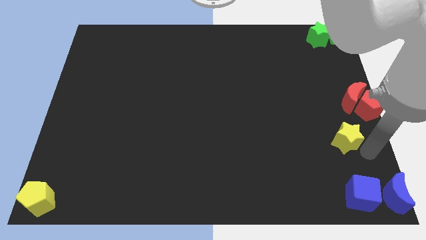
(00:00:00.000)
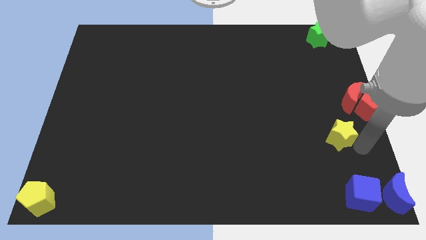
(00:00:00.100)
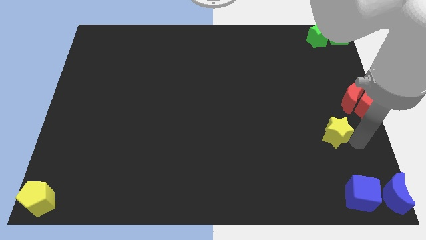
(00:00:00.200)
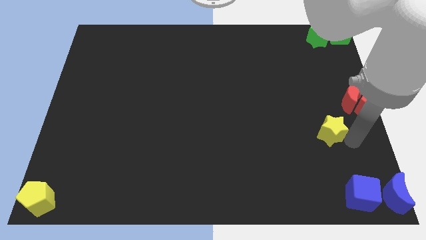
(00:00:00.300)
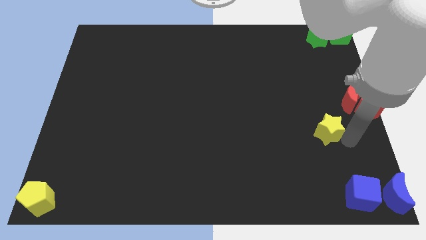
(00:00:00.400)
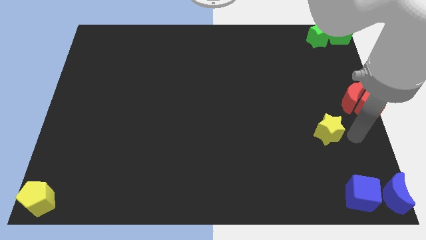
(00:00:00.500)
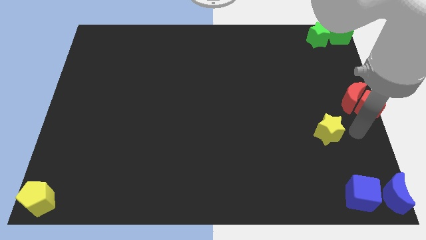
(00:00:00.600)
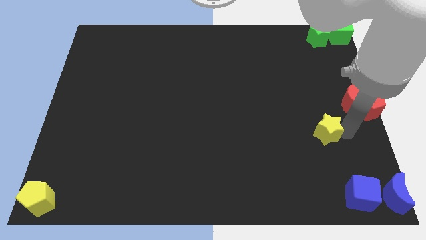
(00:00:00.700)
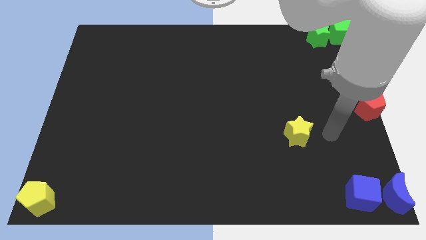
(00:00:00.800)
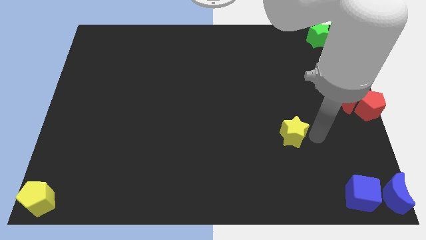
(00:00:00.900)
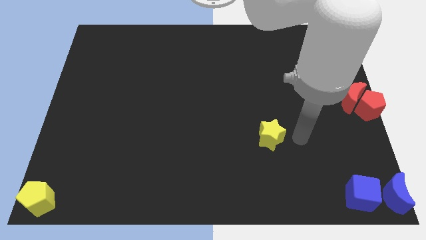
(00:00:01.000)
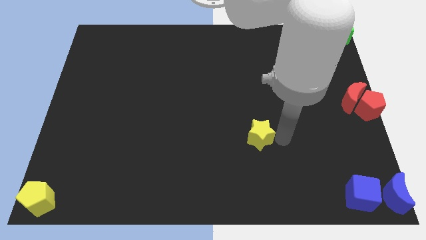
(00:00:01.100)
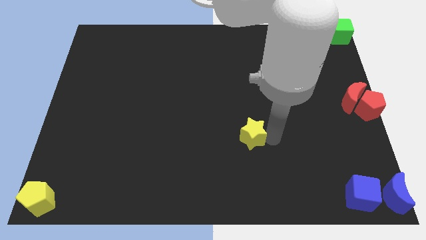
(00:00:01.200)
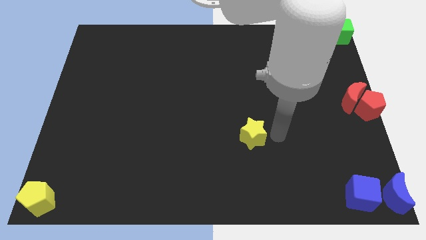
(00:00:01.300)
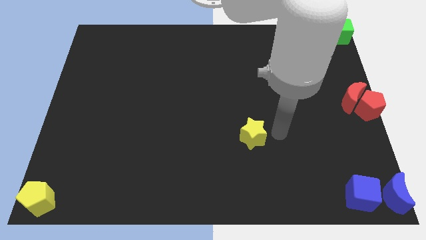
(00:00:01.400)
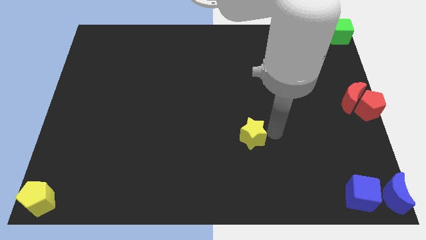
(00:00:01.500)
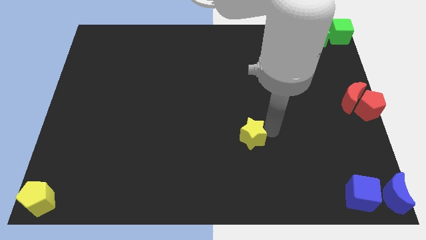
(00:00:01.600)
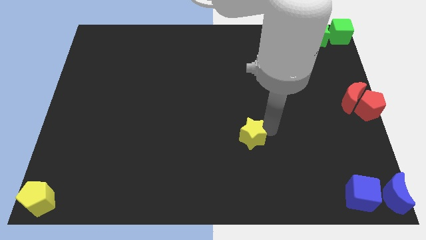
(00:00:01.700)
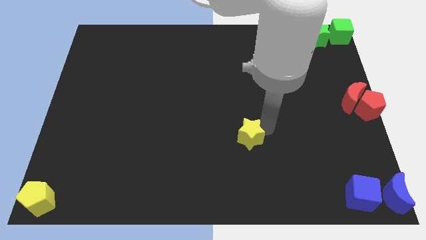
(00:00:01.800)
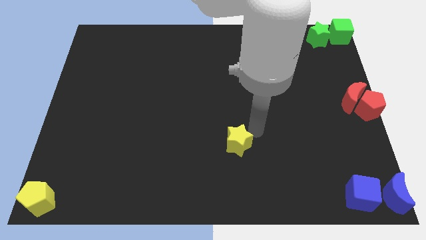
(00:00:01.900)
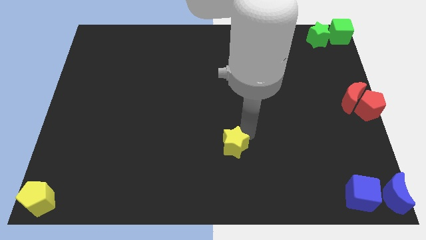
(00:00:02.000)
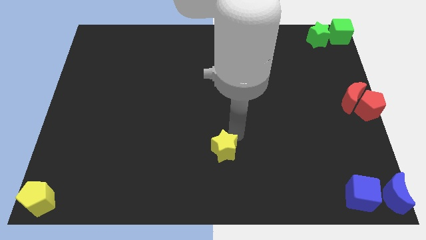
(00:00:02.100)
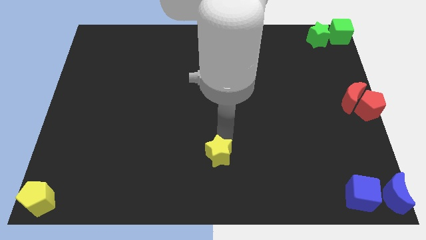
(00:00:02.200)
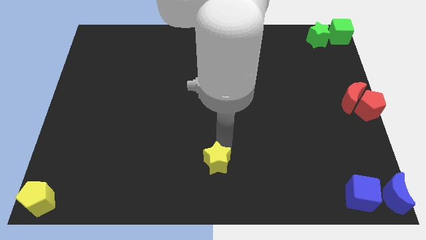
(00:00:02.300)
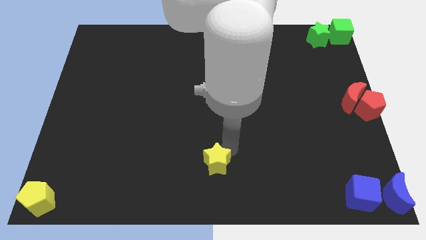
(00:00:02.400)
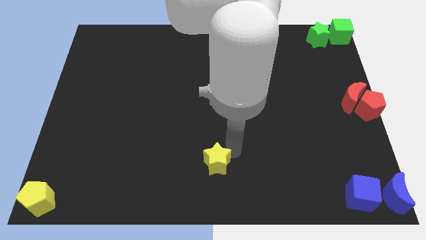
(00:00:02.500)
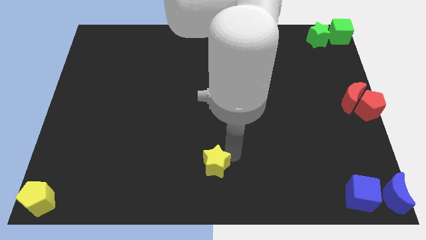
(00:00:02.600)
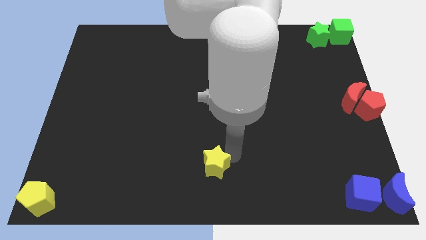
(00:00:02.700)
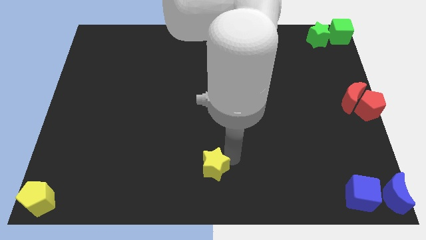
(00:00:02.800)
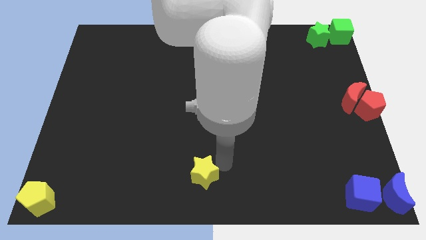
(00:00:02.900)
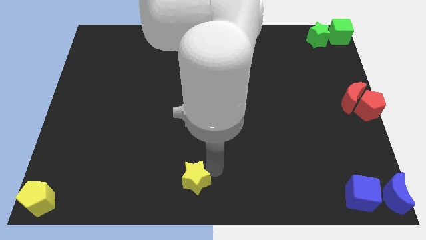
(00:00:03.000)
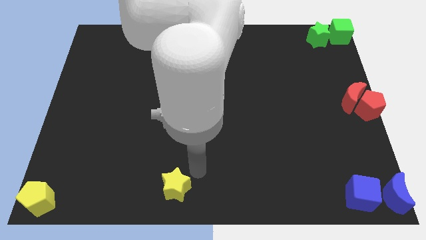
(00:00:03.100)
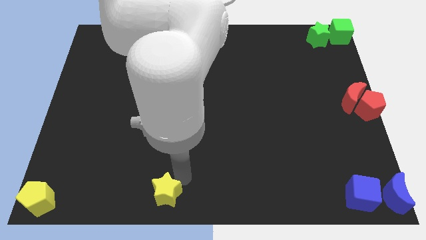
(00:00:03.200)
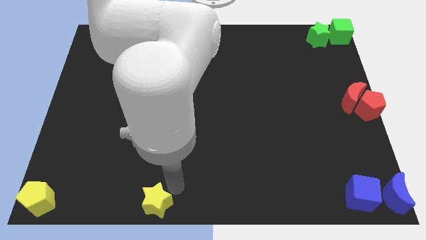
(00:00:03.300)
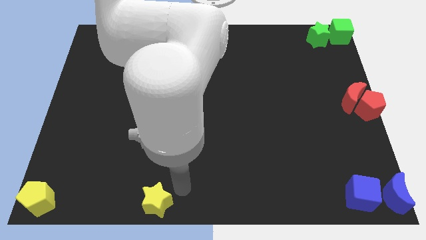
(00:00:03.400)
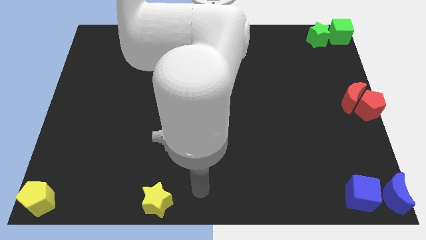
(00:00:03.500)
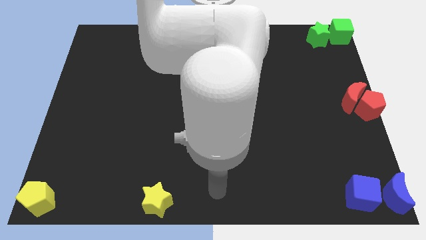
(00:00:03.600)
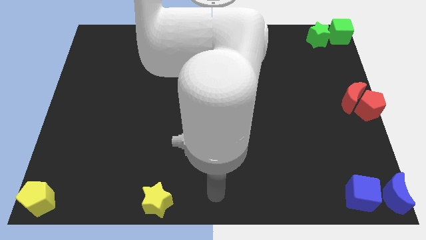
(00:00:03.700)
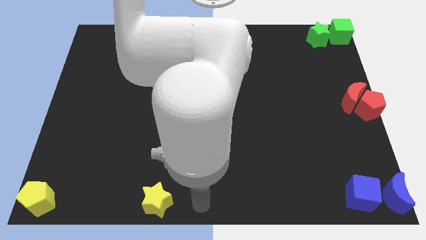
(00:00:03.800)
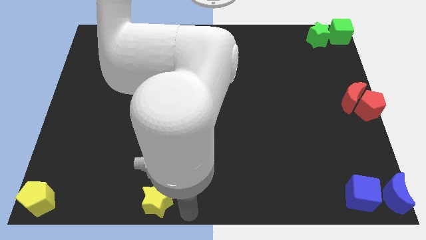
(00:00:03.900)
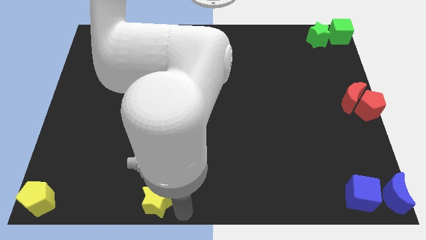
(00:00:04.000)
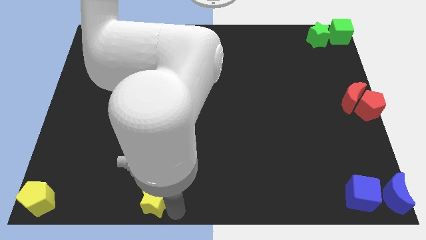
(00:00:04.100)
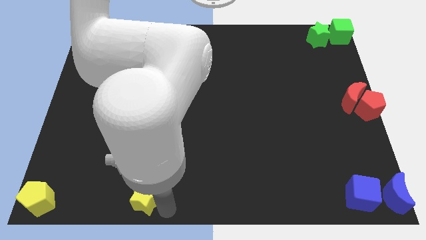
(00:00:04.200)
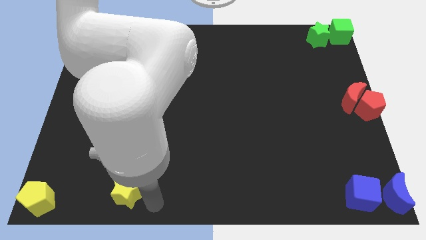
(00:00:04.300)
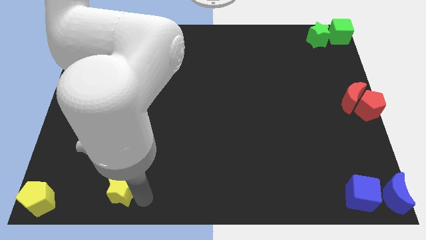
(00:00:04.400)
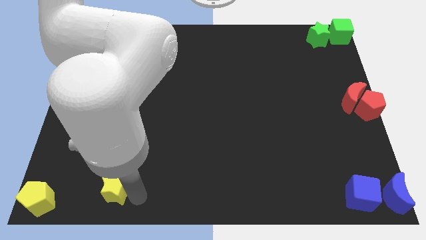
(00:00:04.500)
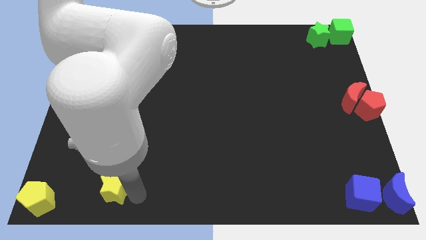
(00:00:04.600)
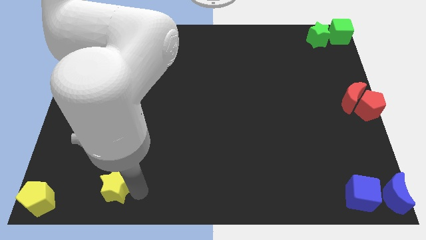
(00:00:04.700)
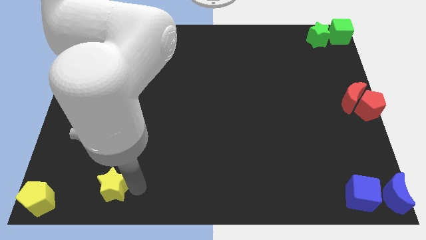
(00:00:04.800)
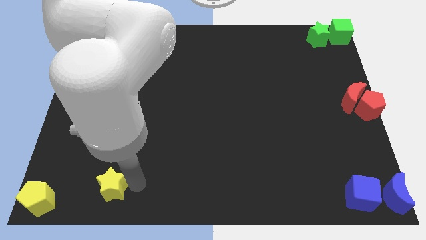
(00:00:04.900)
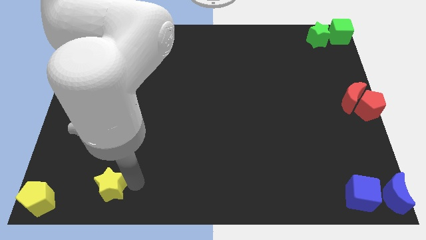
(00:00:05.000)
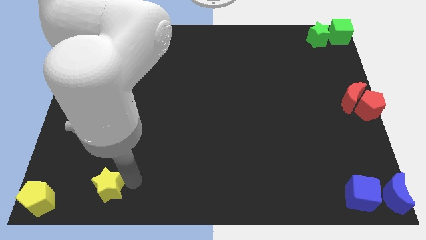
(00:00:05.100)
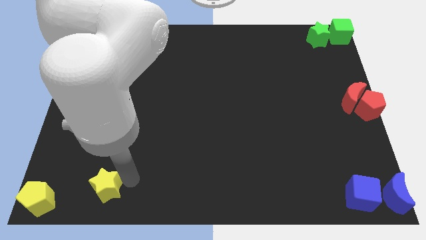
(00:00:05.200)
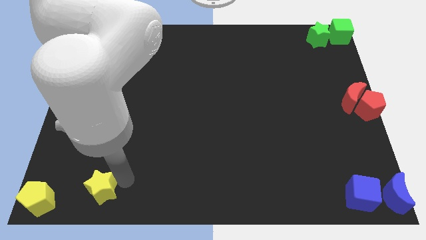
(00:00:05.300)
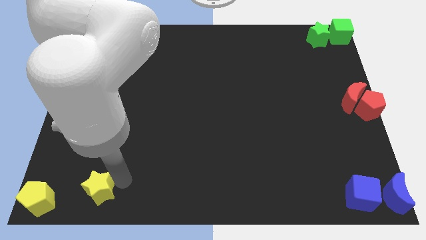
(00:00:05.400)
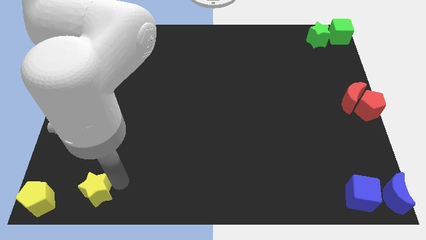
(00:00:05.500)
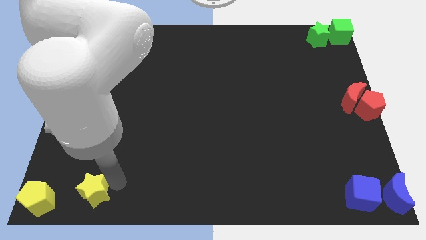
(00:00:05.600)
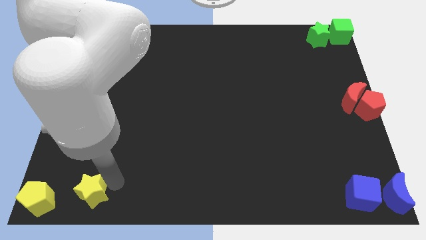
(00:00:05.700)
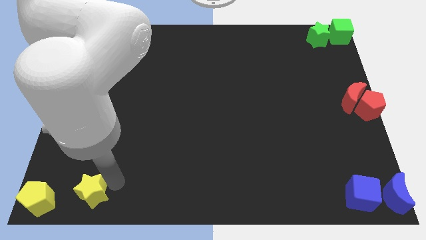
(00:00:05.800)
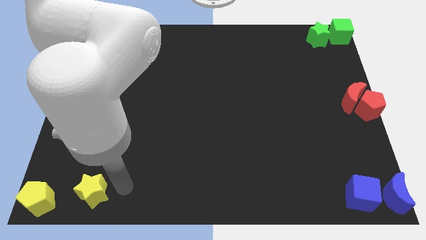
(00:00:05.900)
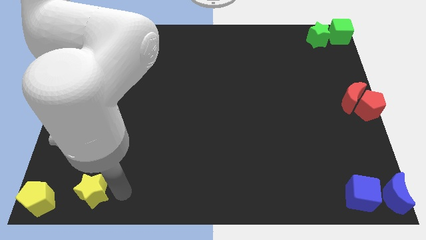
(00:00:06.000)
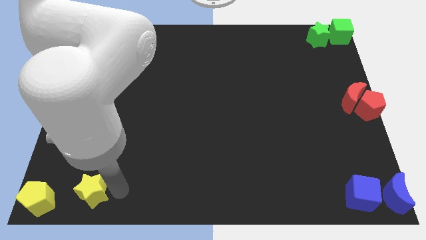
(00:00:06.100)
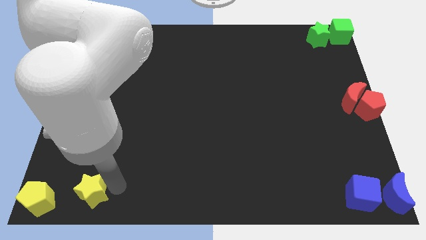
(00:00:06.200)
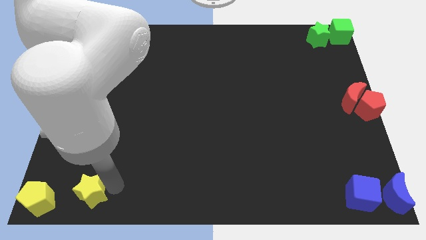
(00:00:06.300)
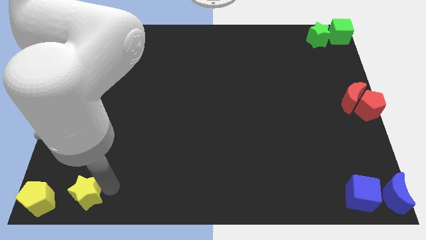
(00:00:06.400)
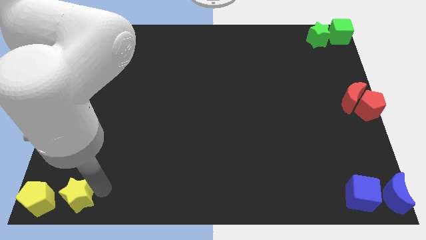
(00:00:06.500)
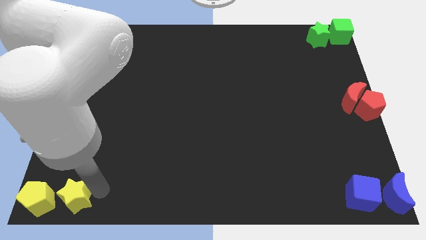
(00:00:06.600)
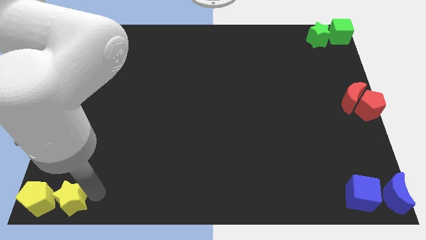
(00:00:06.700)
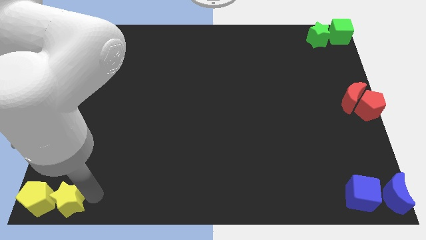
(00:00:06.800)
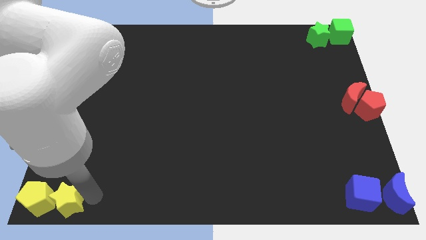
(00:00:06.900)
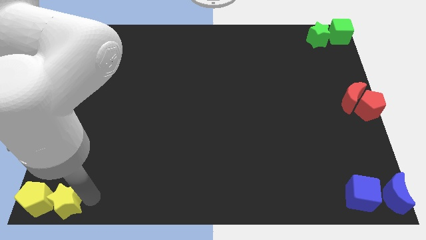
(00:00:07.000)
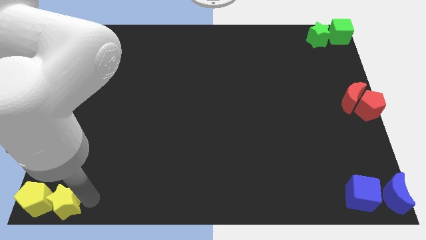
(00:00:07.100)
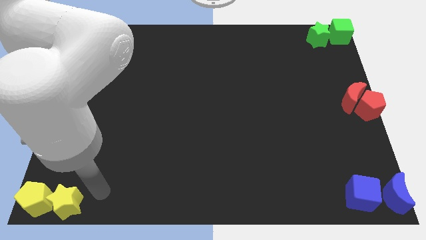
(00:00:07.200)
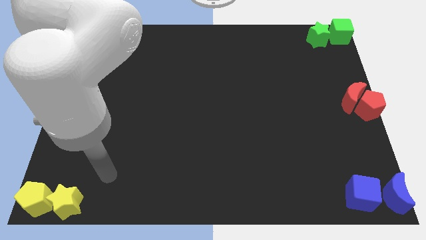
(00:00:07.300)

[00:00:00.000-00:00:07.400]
move the yellow star into the yellow pentagon

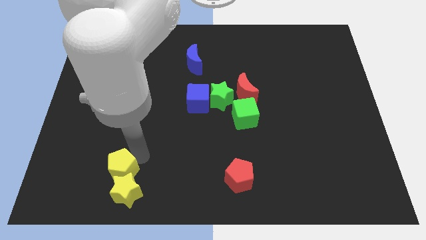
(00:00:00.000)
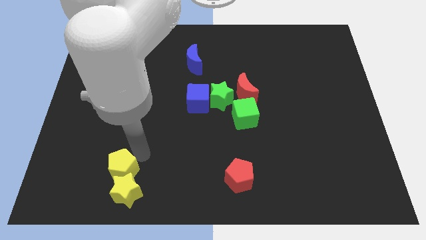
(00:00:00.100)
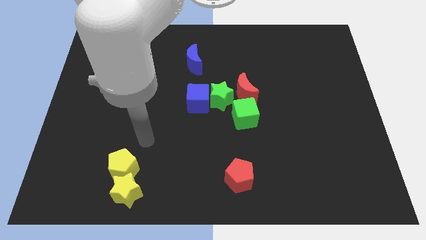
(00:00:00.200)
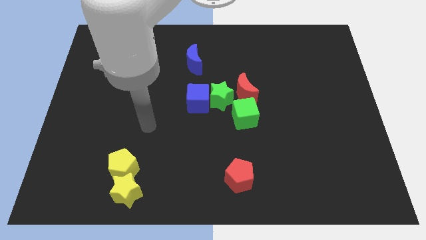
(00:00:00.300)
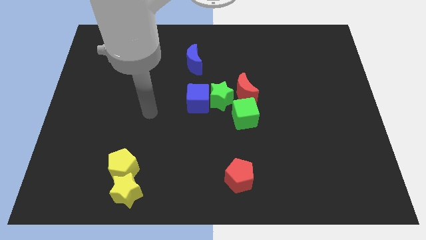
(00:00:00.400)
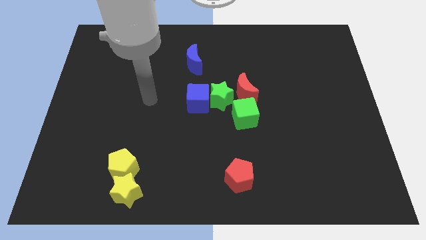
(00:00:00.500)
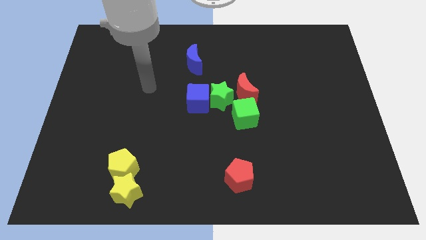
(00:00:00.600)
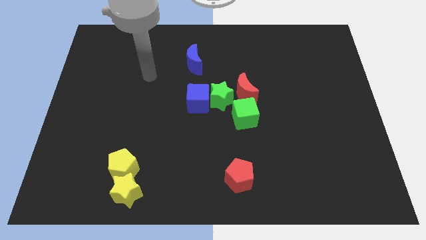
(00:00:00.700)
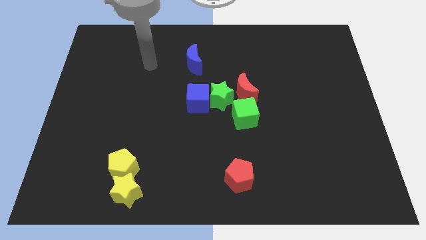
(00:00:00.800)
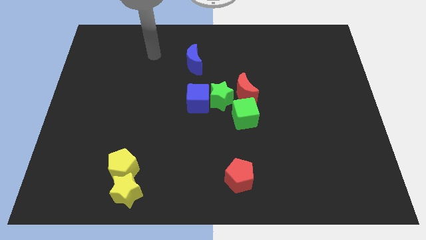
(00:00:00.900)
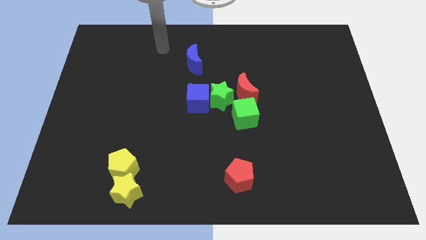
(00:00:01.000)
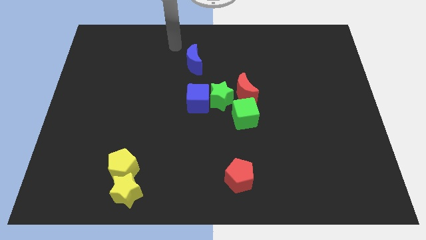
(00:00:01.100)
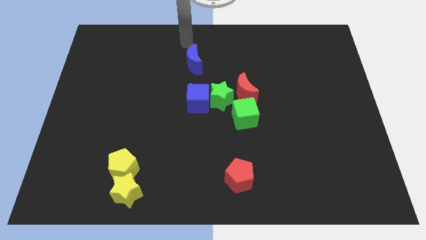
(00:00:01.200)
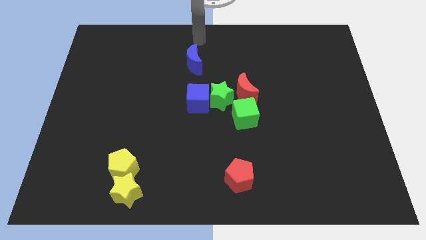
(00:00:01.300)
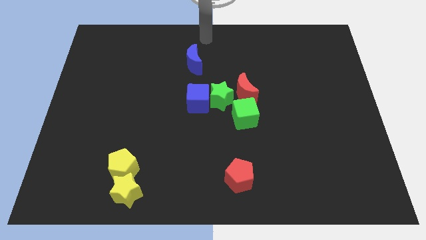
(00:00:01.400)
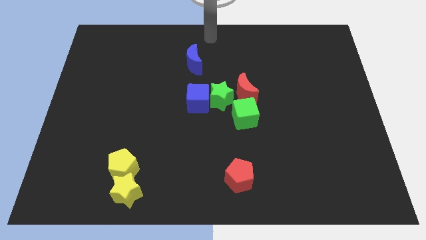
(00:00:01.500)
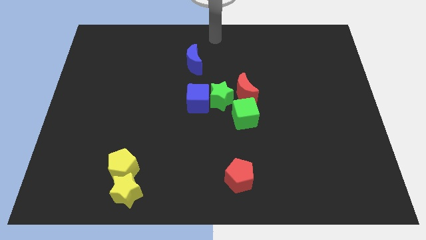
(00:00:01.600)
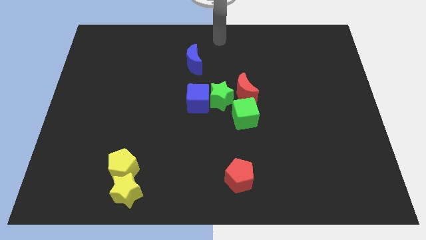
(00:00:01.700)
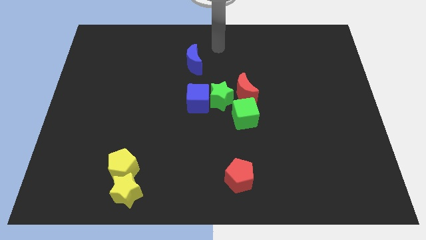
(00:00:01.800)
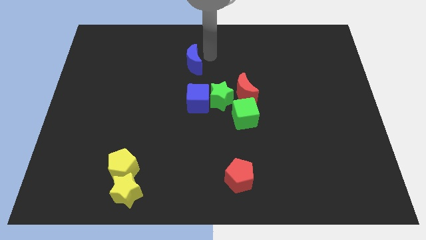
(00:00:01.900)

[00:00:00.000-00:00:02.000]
move your hand towards the blue crescent
